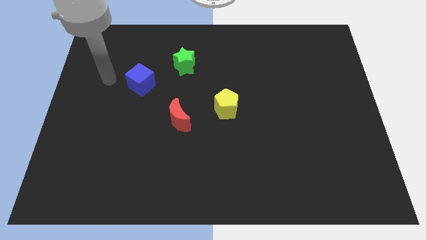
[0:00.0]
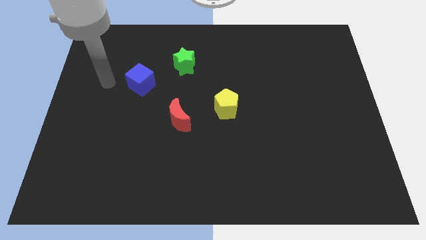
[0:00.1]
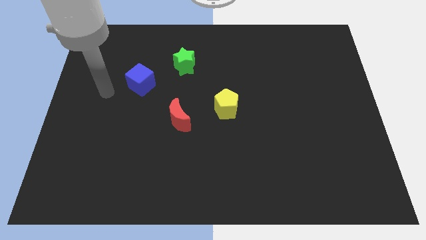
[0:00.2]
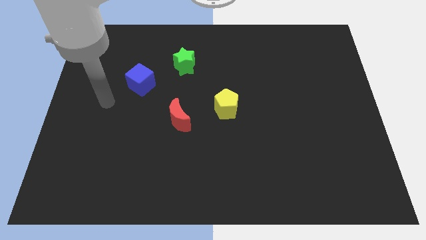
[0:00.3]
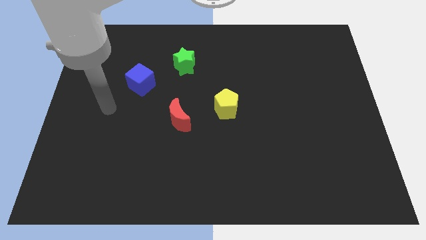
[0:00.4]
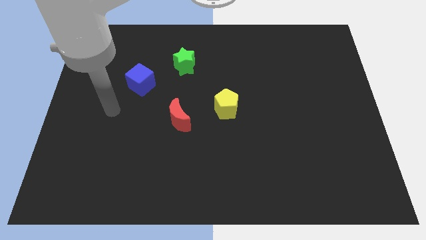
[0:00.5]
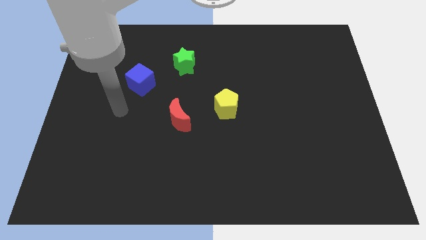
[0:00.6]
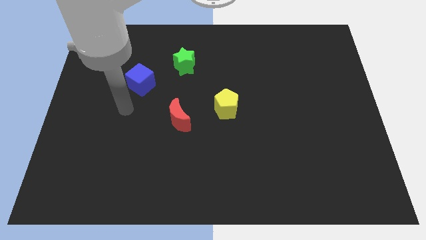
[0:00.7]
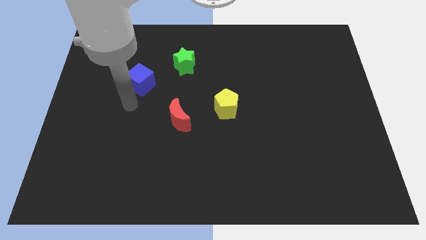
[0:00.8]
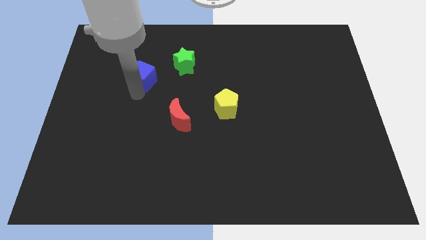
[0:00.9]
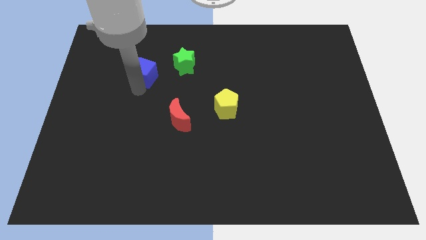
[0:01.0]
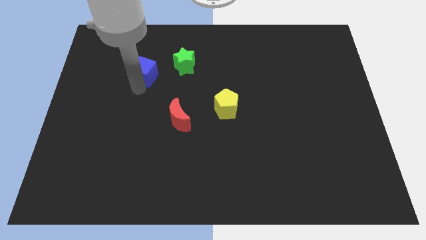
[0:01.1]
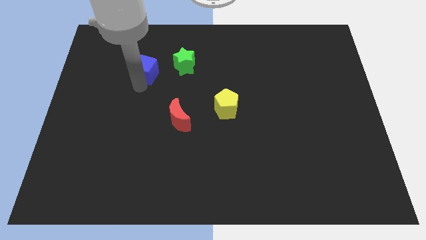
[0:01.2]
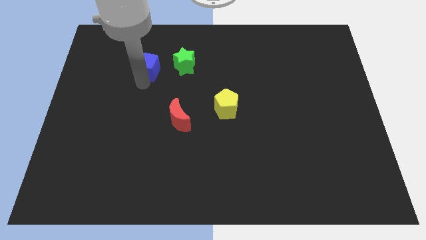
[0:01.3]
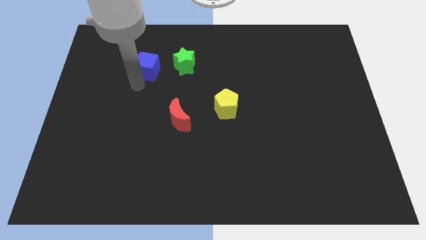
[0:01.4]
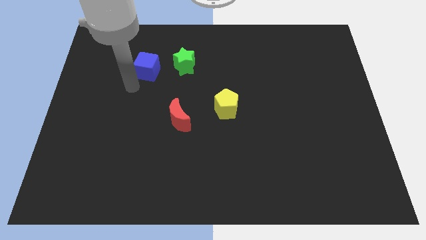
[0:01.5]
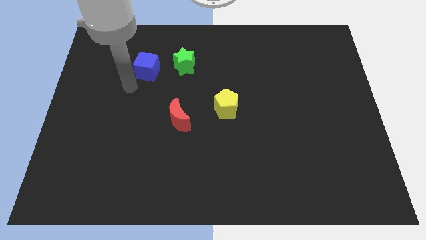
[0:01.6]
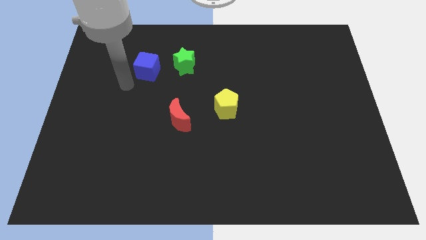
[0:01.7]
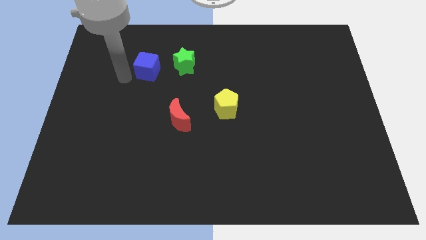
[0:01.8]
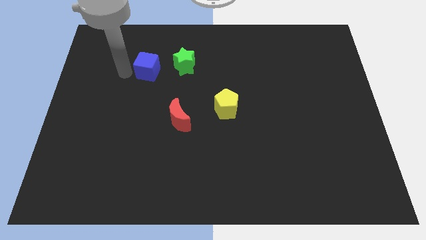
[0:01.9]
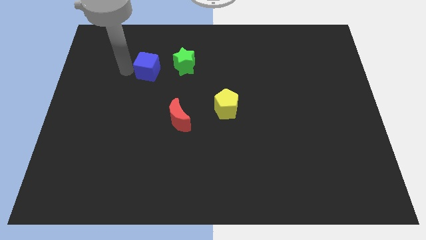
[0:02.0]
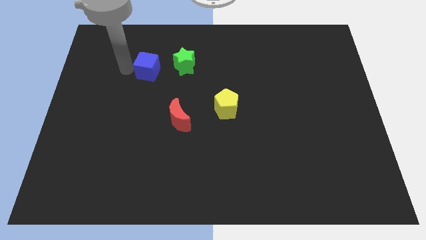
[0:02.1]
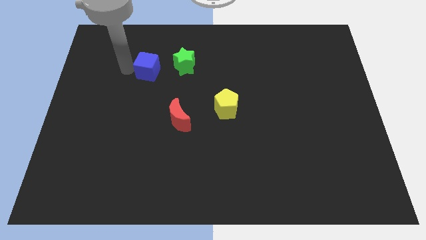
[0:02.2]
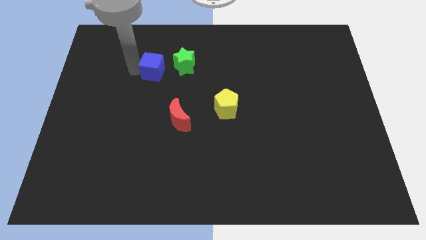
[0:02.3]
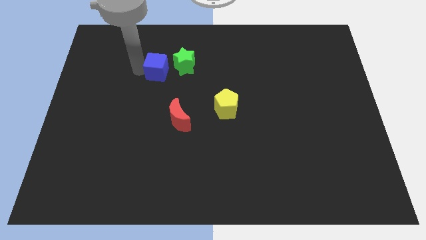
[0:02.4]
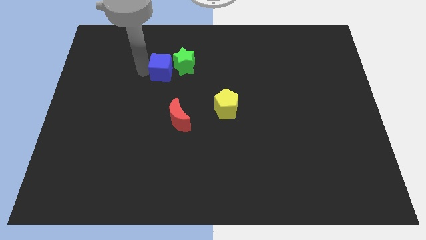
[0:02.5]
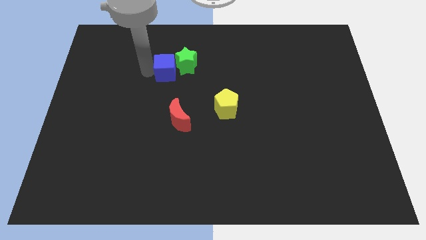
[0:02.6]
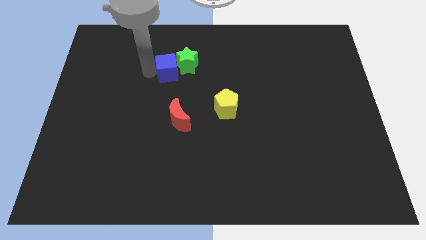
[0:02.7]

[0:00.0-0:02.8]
push the blue cube to the green star

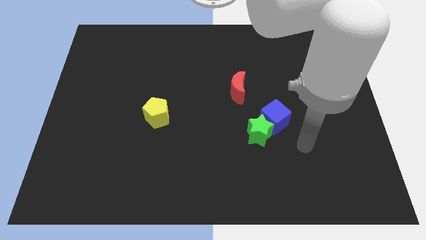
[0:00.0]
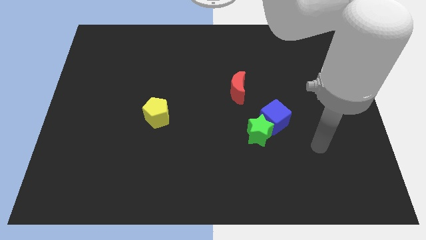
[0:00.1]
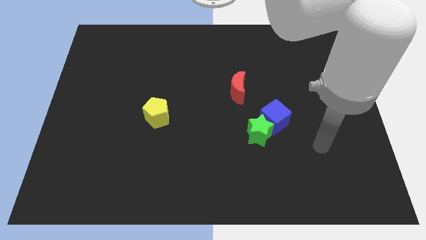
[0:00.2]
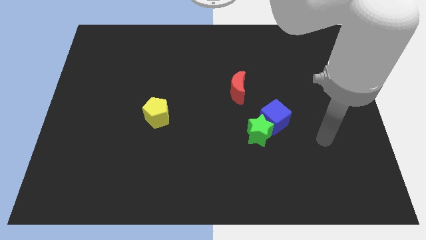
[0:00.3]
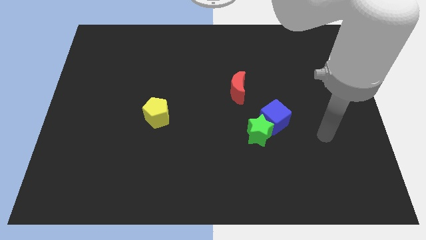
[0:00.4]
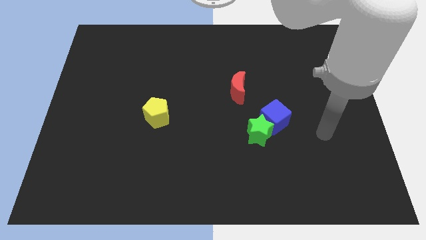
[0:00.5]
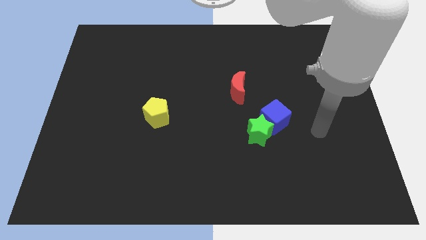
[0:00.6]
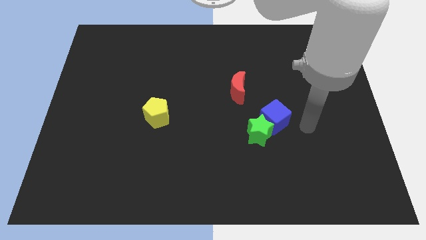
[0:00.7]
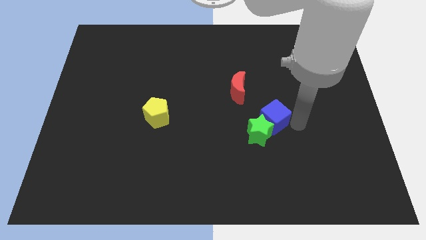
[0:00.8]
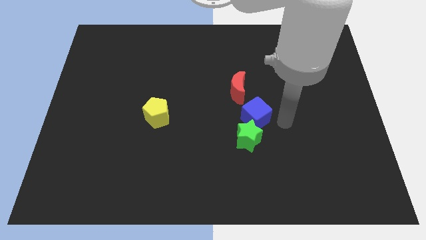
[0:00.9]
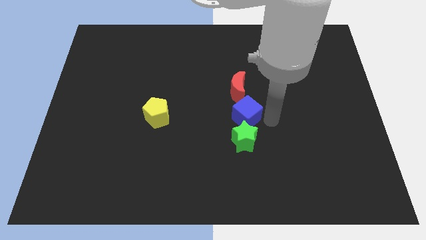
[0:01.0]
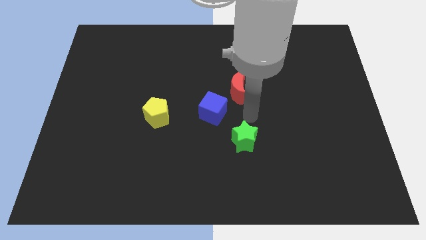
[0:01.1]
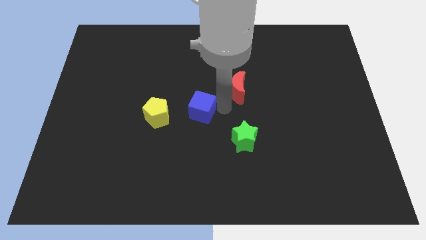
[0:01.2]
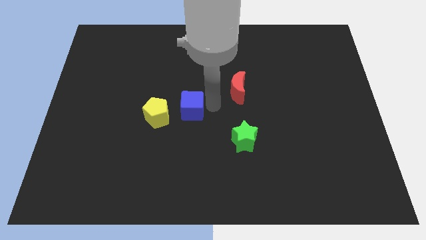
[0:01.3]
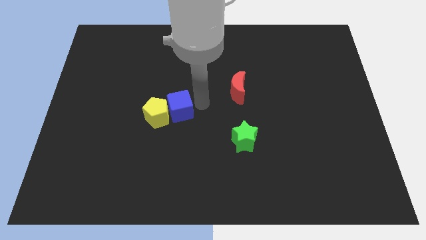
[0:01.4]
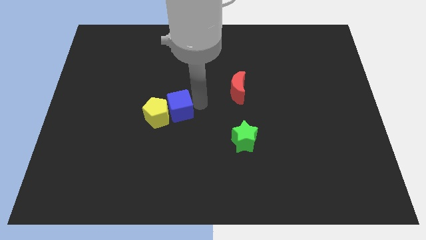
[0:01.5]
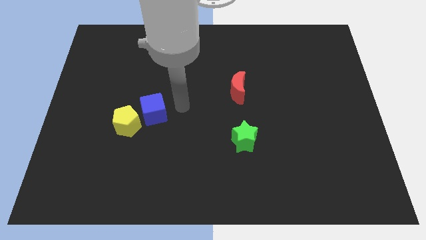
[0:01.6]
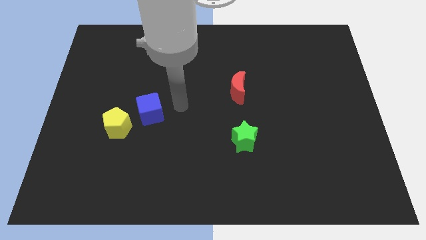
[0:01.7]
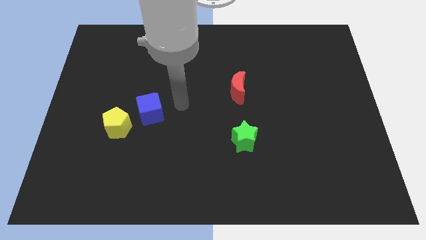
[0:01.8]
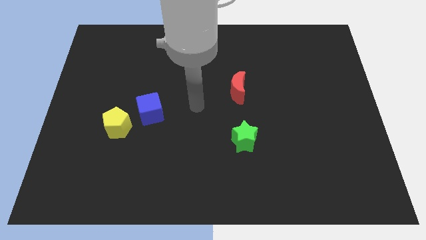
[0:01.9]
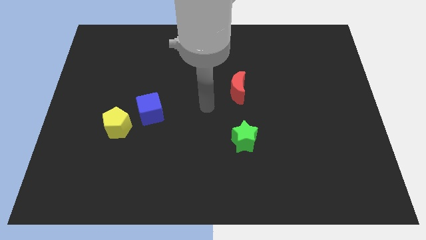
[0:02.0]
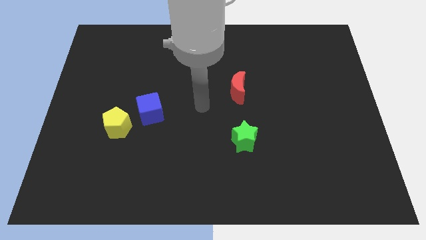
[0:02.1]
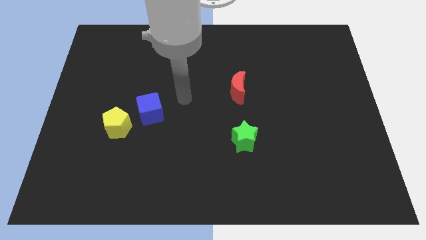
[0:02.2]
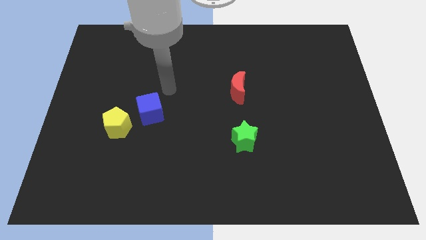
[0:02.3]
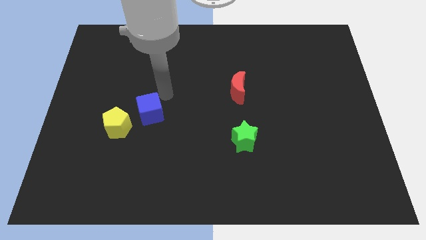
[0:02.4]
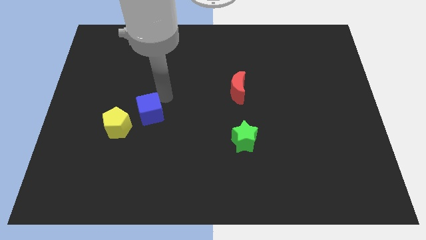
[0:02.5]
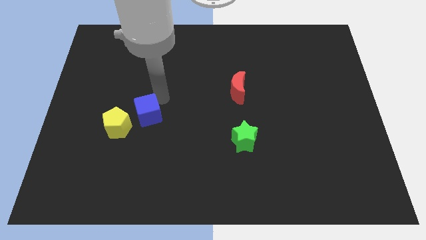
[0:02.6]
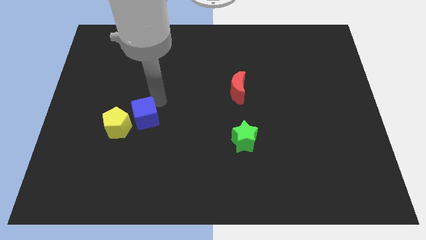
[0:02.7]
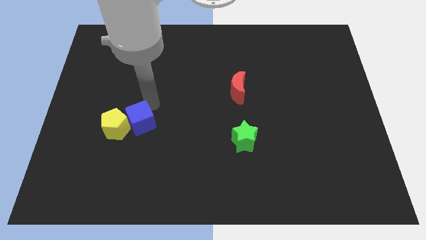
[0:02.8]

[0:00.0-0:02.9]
push the blue block towards the yellow pentagon

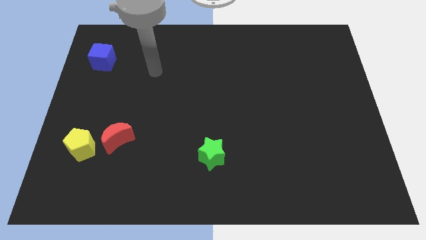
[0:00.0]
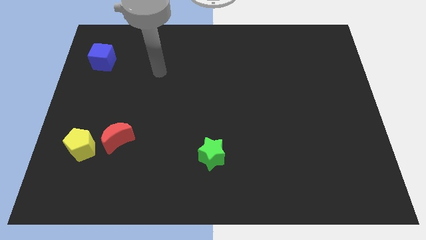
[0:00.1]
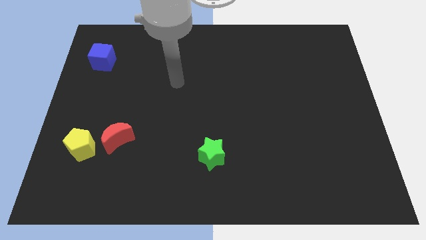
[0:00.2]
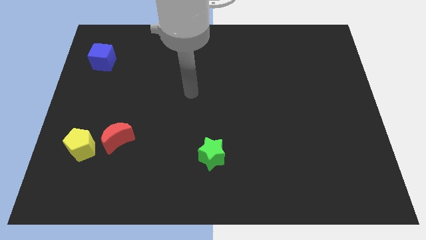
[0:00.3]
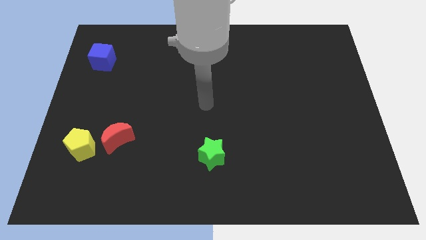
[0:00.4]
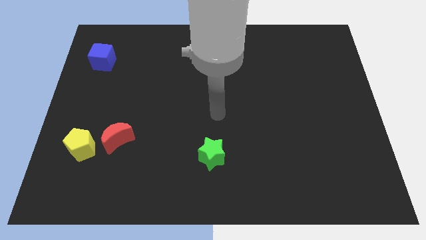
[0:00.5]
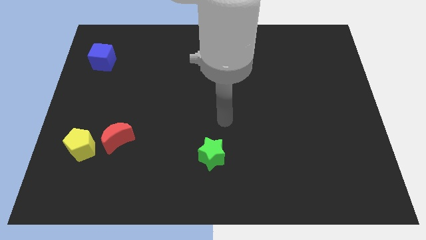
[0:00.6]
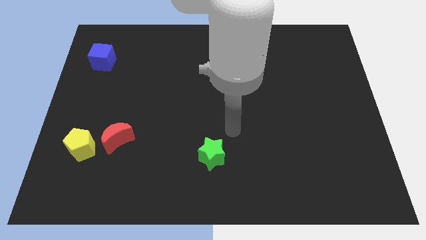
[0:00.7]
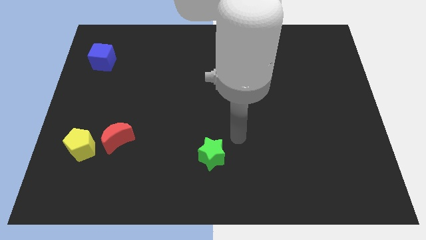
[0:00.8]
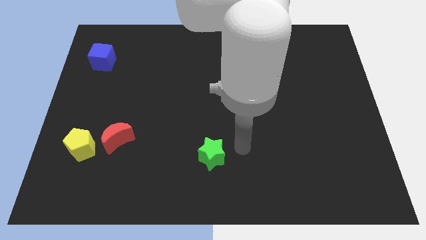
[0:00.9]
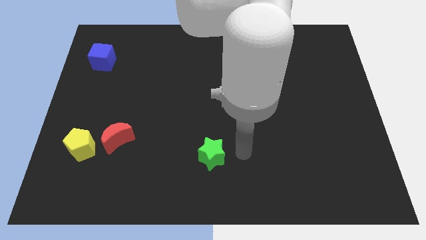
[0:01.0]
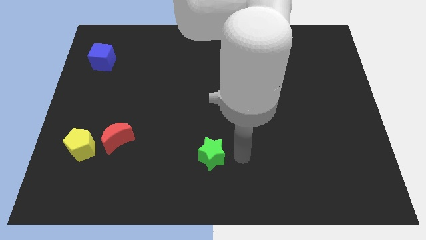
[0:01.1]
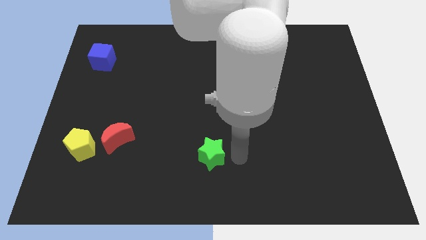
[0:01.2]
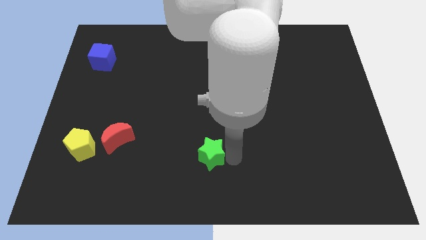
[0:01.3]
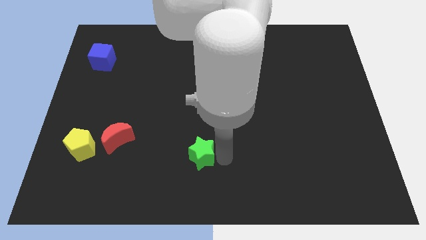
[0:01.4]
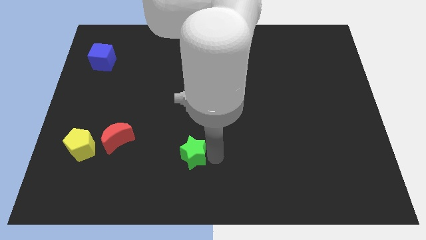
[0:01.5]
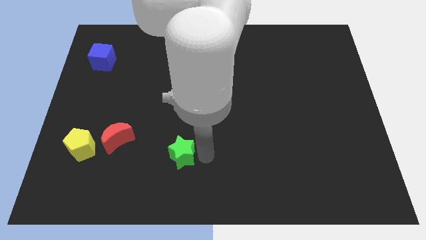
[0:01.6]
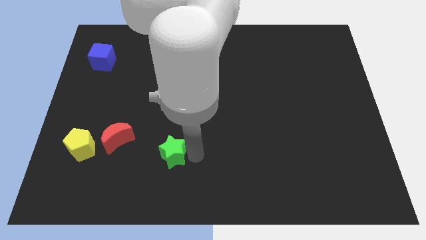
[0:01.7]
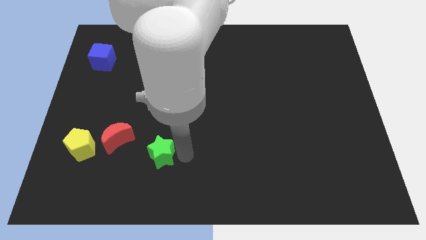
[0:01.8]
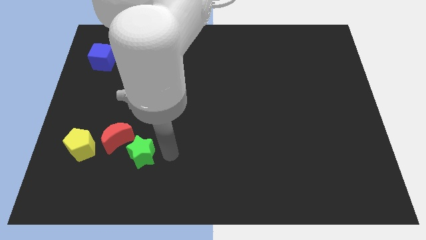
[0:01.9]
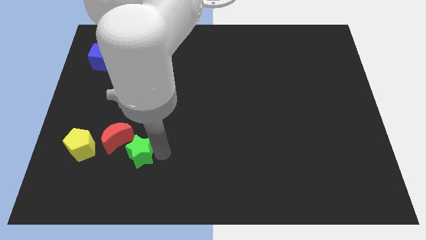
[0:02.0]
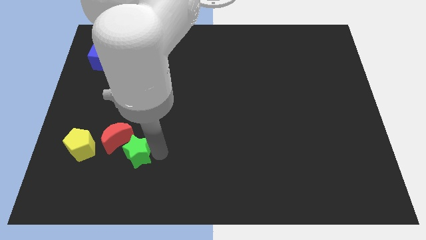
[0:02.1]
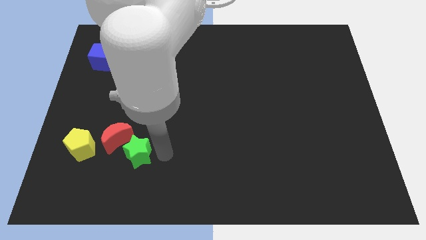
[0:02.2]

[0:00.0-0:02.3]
move the green block next to the red moon
